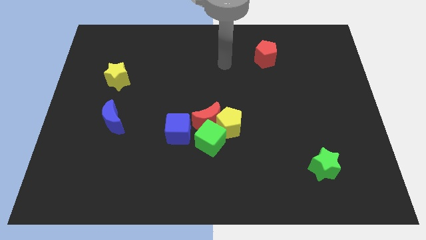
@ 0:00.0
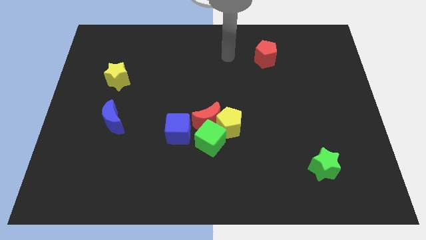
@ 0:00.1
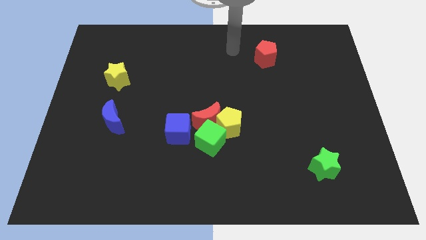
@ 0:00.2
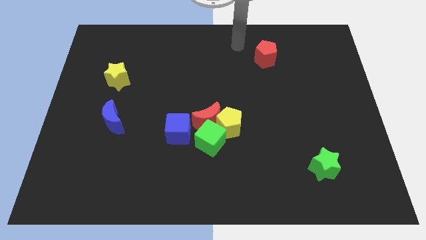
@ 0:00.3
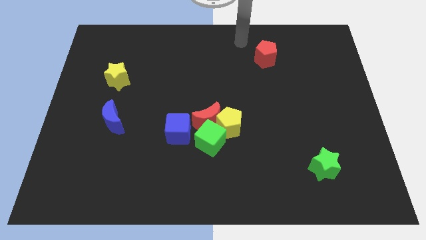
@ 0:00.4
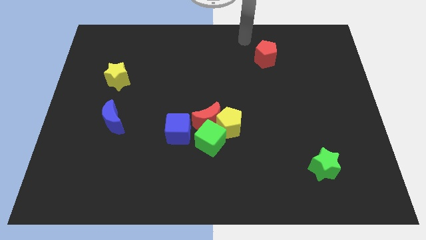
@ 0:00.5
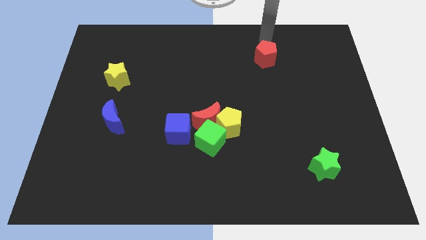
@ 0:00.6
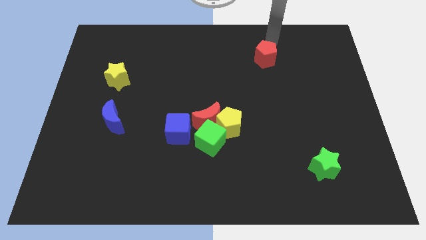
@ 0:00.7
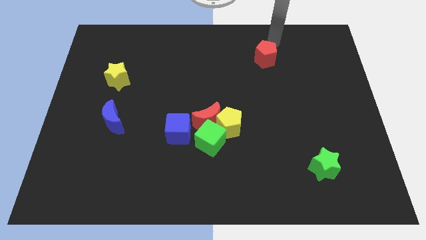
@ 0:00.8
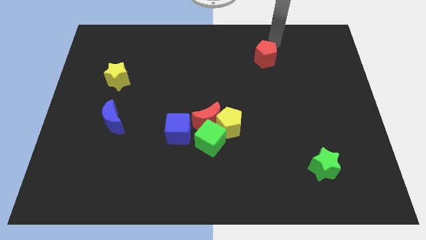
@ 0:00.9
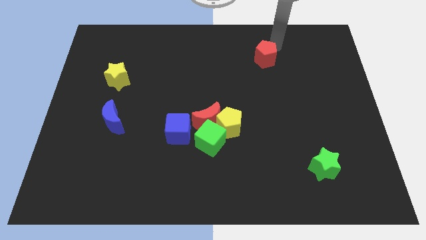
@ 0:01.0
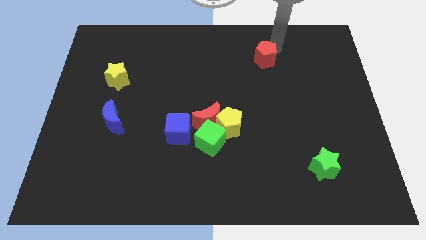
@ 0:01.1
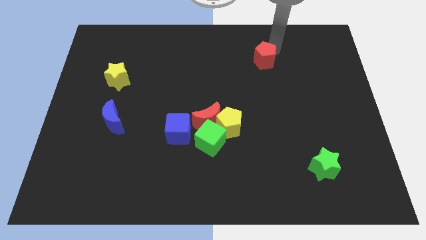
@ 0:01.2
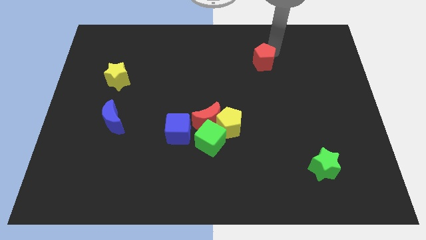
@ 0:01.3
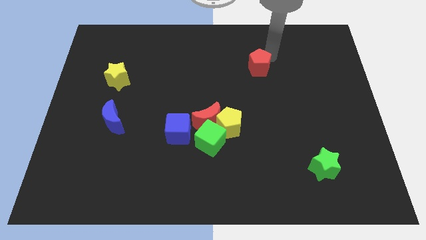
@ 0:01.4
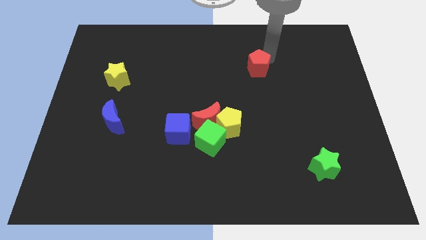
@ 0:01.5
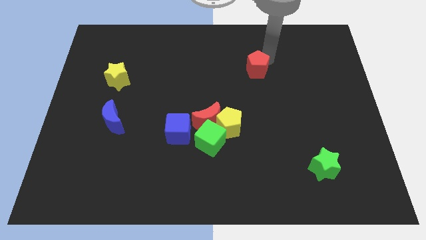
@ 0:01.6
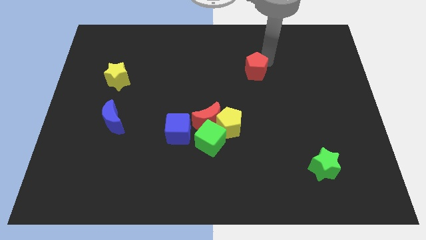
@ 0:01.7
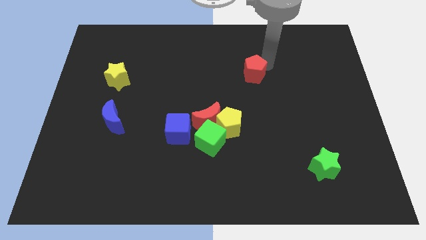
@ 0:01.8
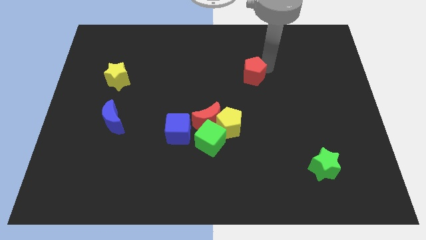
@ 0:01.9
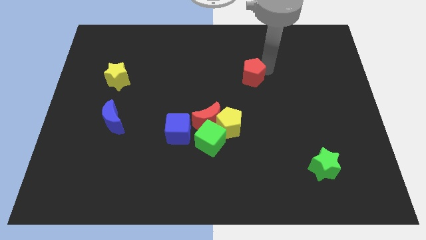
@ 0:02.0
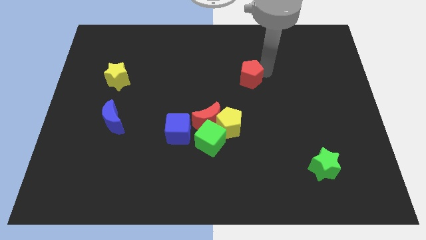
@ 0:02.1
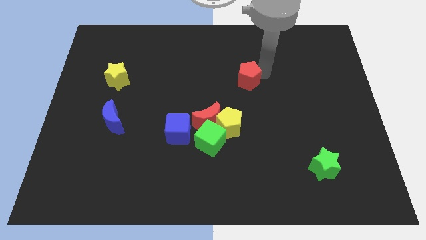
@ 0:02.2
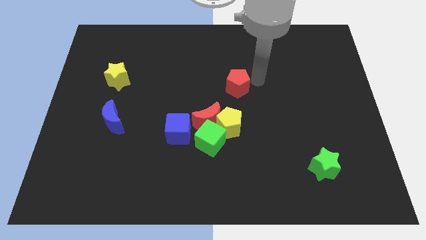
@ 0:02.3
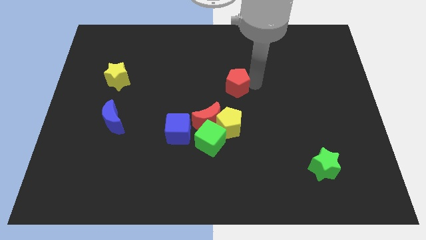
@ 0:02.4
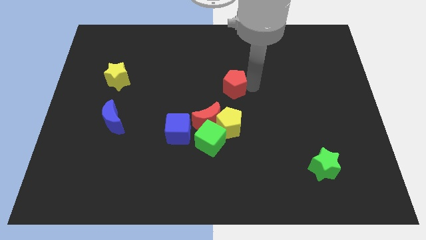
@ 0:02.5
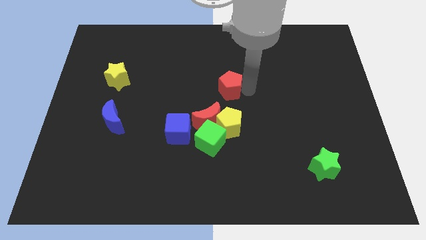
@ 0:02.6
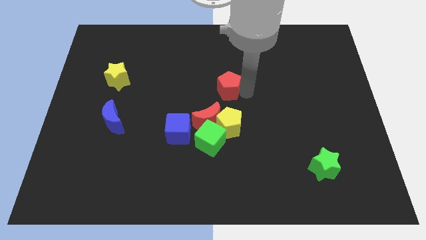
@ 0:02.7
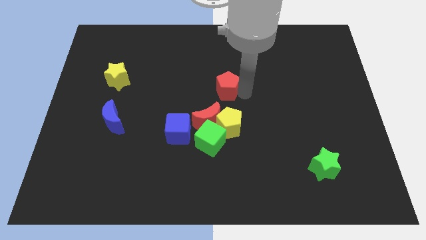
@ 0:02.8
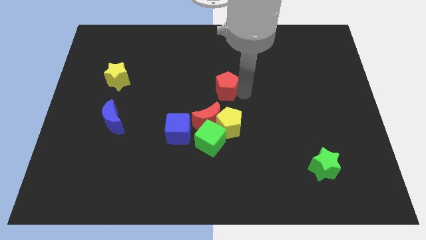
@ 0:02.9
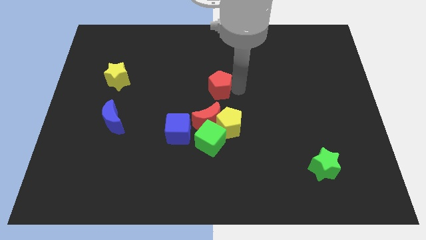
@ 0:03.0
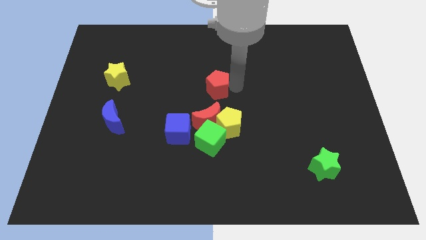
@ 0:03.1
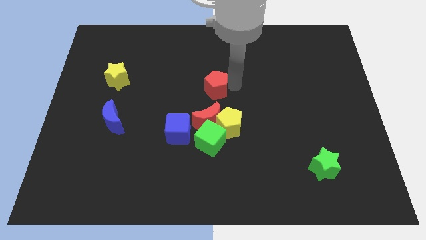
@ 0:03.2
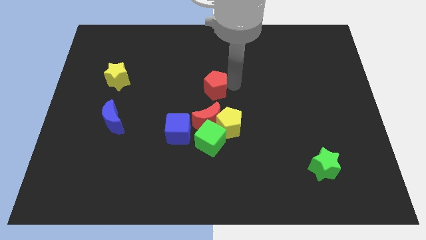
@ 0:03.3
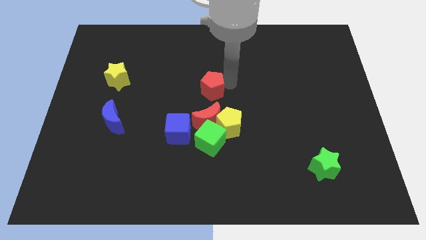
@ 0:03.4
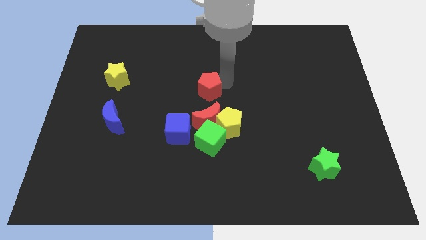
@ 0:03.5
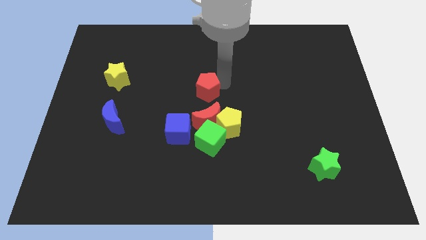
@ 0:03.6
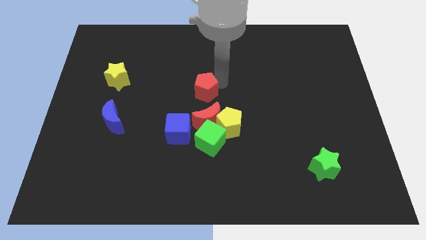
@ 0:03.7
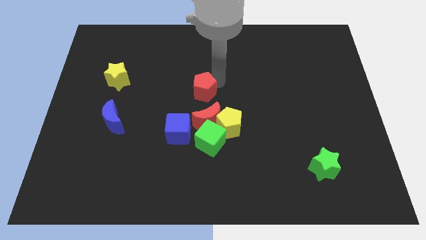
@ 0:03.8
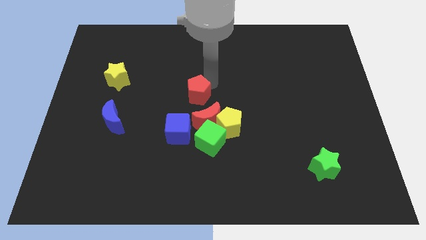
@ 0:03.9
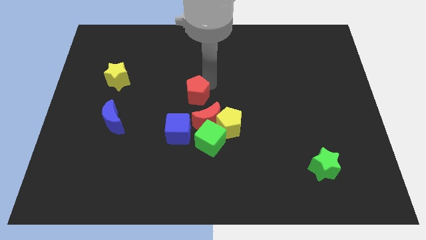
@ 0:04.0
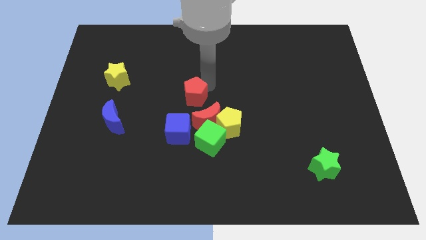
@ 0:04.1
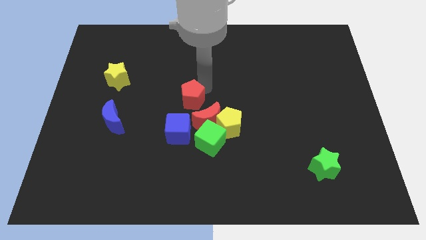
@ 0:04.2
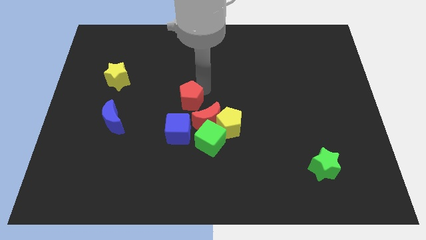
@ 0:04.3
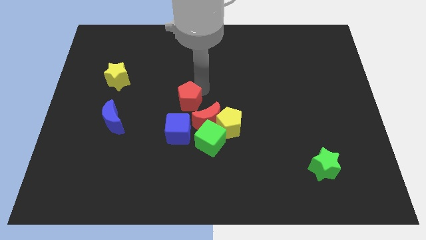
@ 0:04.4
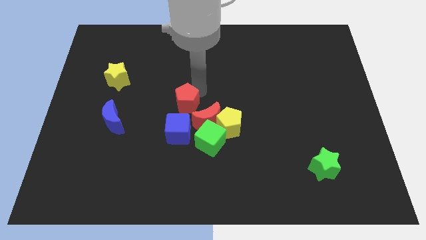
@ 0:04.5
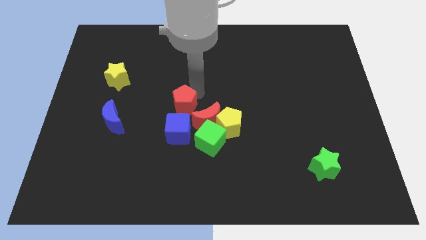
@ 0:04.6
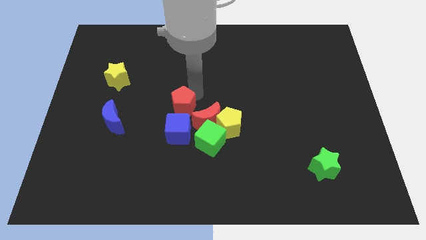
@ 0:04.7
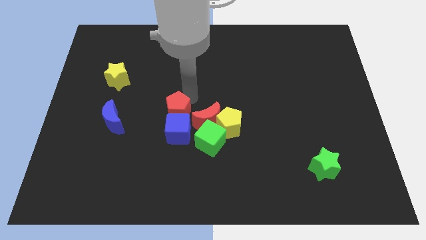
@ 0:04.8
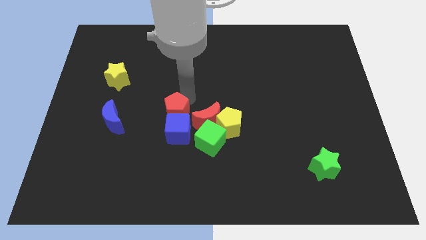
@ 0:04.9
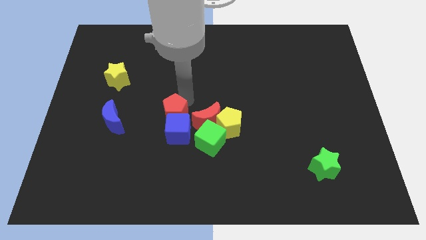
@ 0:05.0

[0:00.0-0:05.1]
slide the red pentagon next to the blue cube

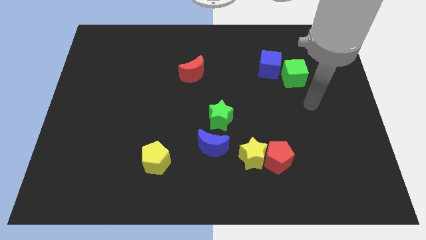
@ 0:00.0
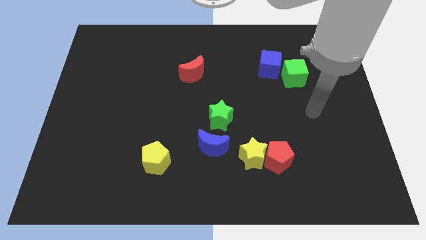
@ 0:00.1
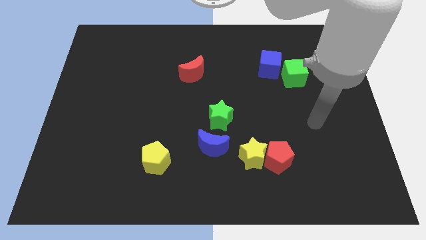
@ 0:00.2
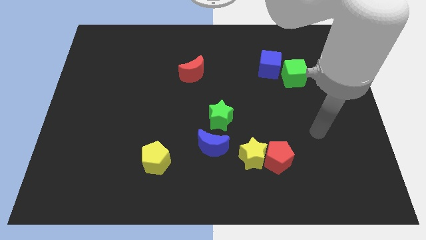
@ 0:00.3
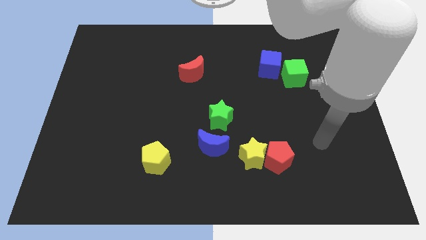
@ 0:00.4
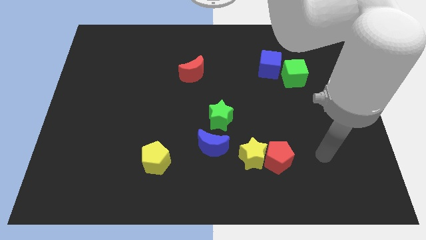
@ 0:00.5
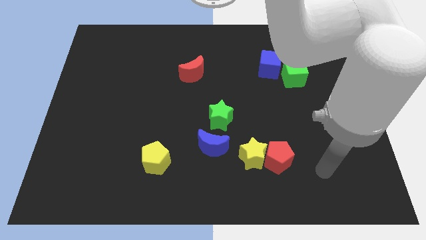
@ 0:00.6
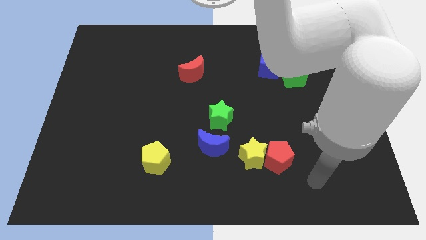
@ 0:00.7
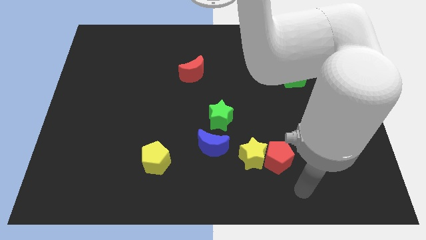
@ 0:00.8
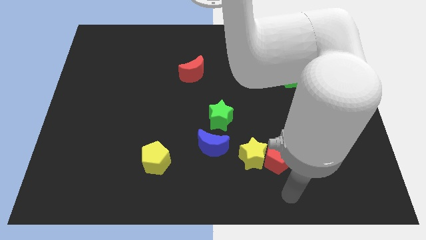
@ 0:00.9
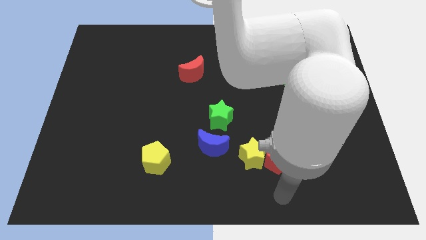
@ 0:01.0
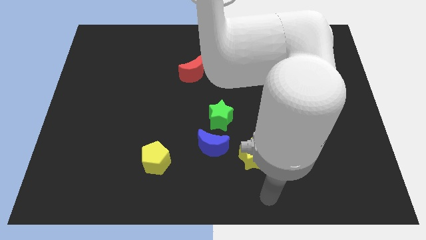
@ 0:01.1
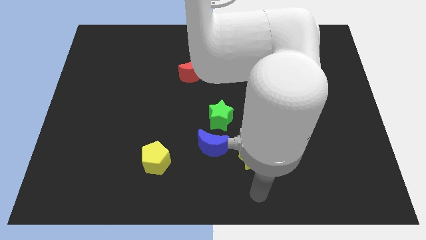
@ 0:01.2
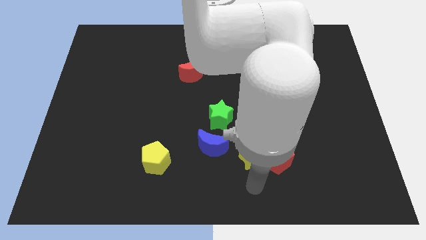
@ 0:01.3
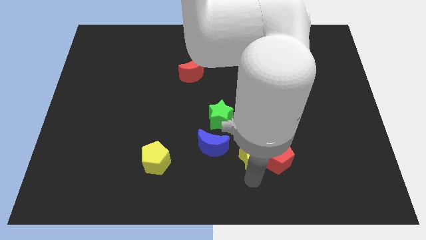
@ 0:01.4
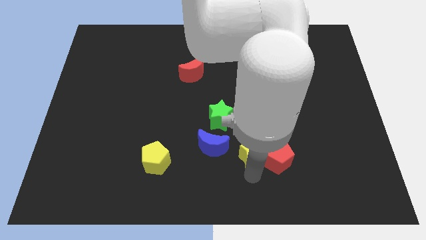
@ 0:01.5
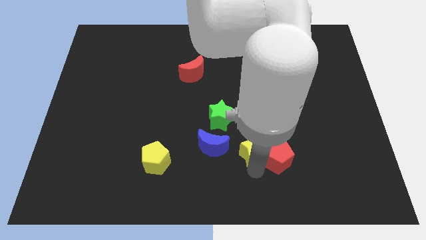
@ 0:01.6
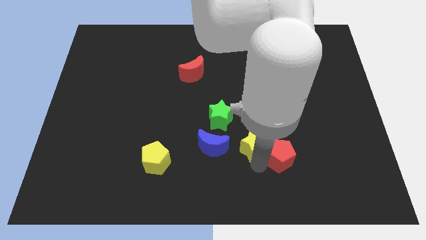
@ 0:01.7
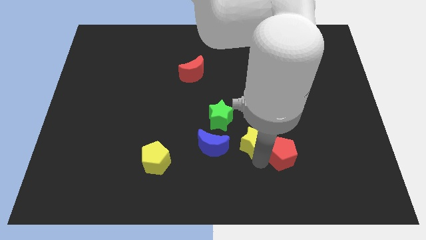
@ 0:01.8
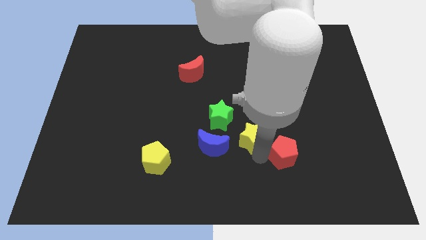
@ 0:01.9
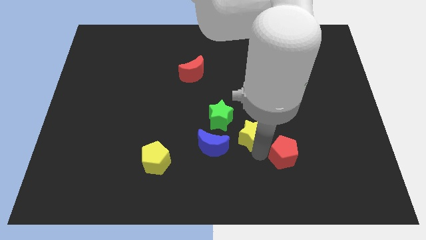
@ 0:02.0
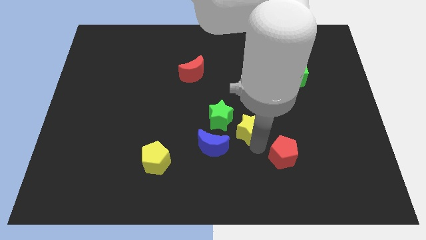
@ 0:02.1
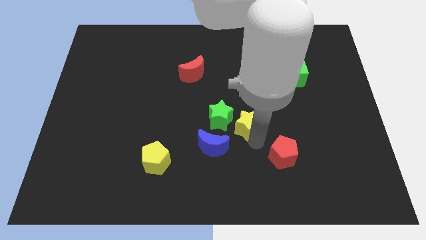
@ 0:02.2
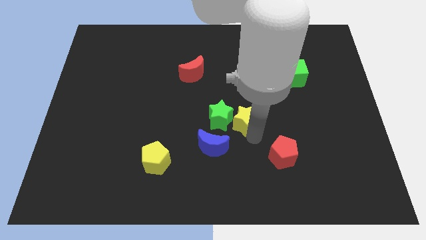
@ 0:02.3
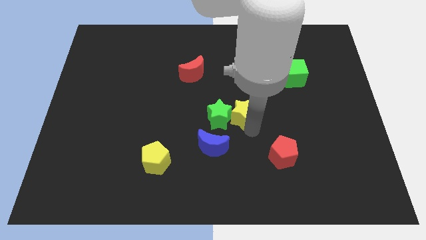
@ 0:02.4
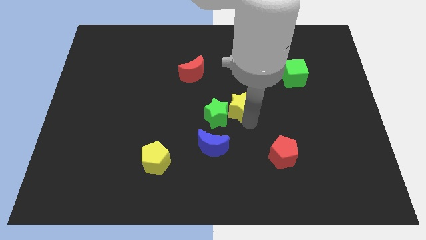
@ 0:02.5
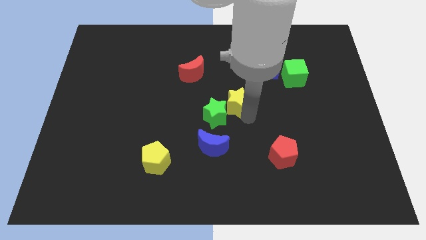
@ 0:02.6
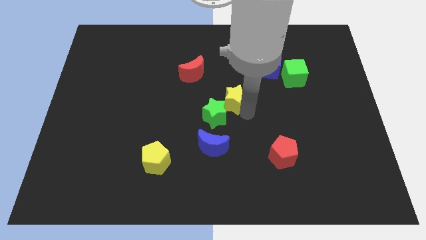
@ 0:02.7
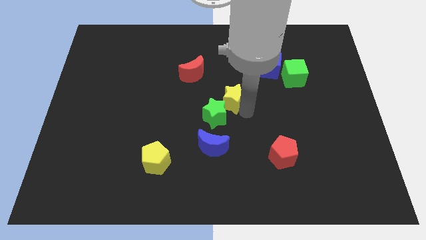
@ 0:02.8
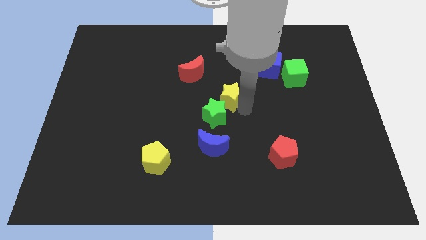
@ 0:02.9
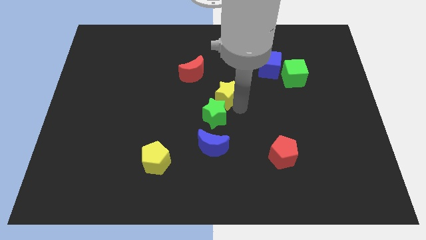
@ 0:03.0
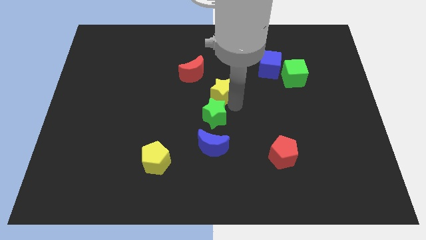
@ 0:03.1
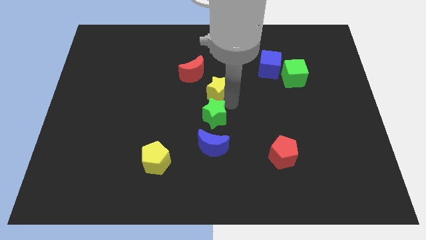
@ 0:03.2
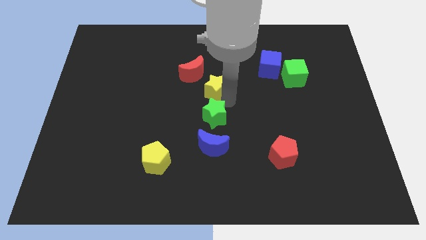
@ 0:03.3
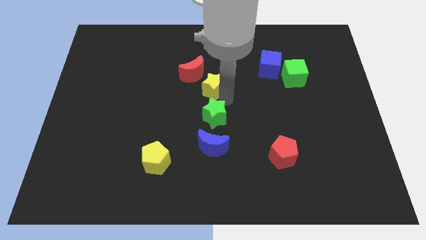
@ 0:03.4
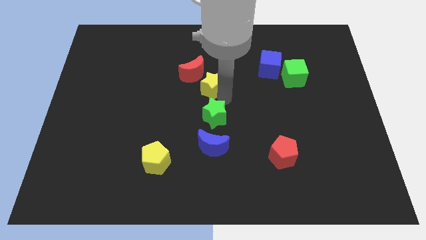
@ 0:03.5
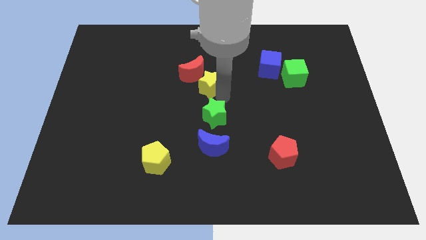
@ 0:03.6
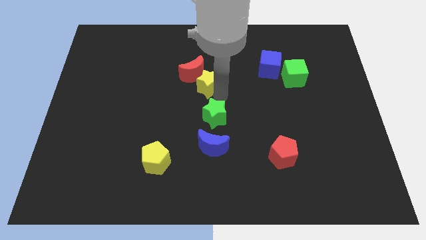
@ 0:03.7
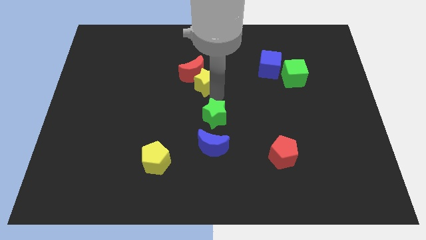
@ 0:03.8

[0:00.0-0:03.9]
slide the yellow star towards the red moon
